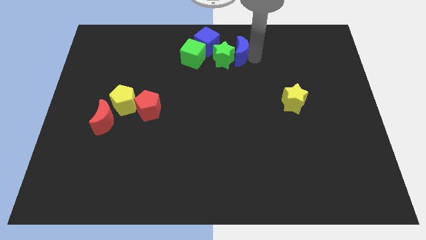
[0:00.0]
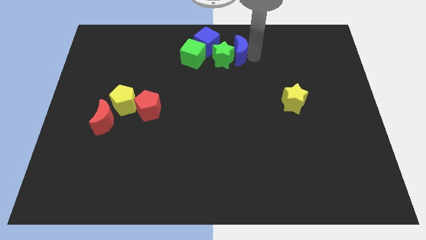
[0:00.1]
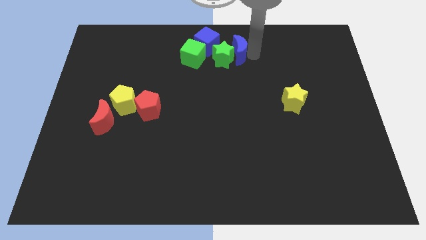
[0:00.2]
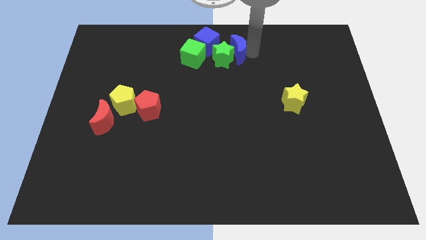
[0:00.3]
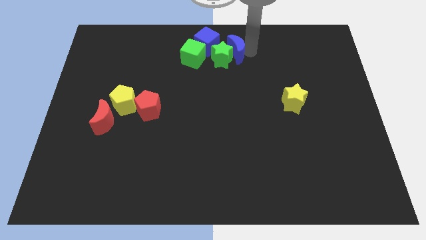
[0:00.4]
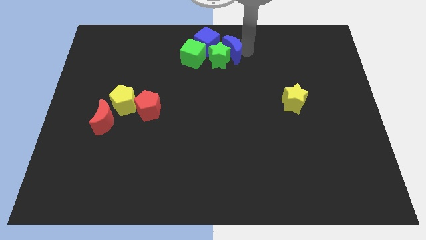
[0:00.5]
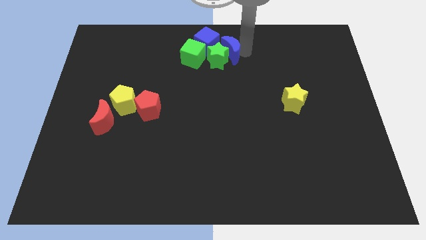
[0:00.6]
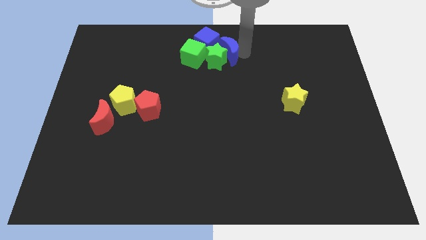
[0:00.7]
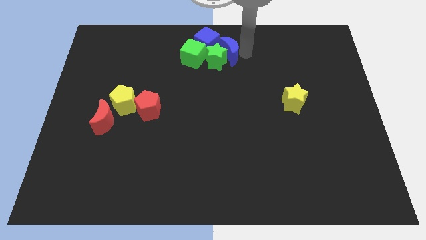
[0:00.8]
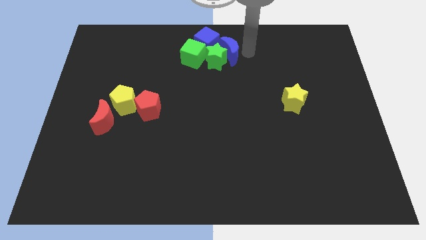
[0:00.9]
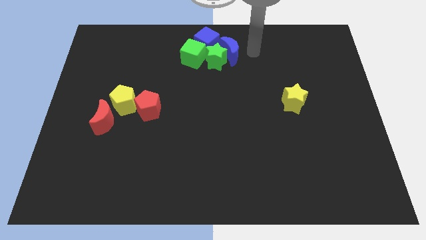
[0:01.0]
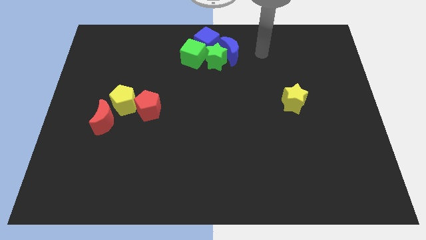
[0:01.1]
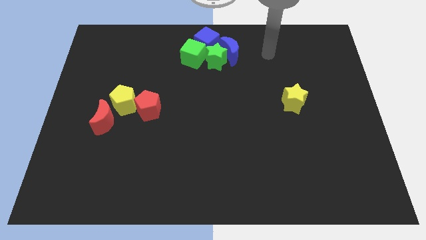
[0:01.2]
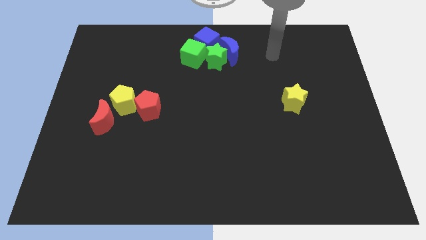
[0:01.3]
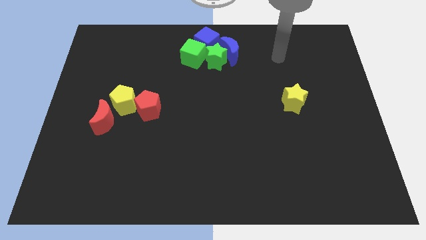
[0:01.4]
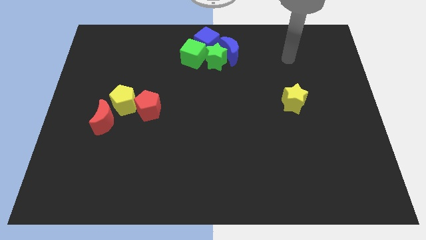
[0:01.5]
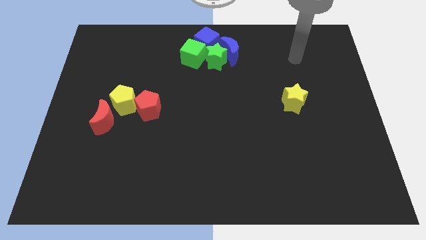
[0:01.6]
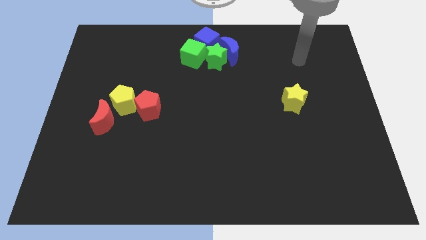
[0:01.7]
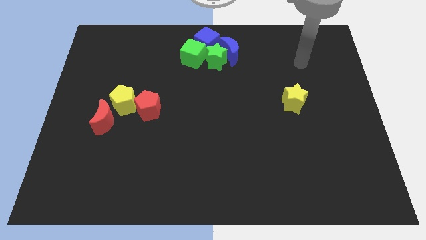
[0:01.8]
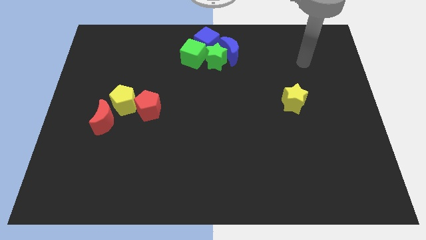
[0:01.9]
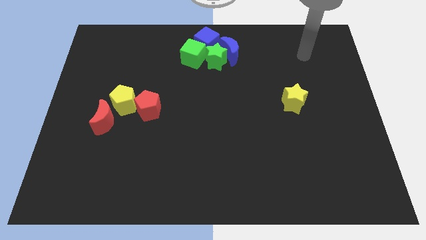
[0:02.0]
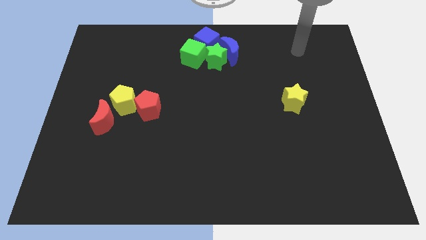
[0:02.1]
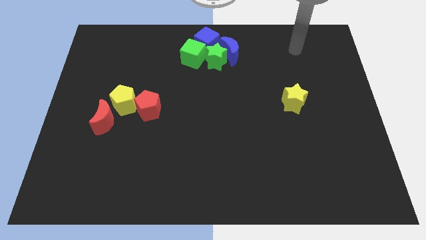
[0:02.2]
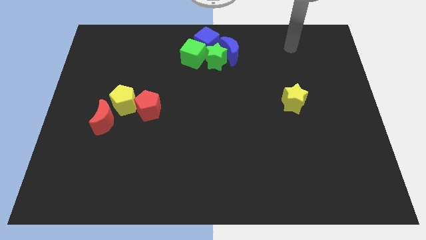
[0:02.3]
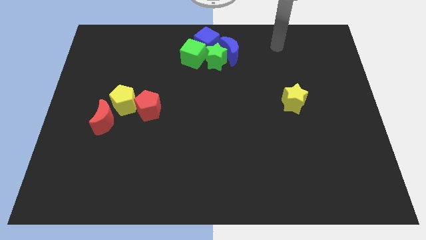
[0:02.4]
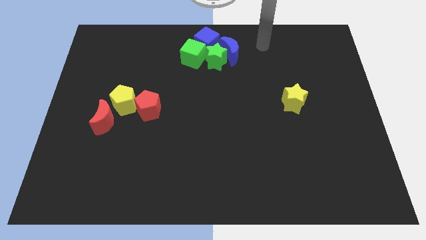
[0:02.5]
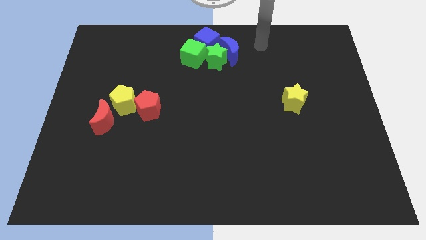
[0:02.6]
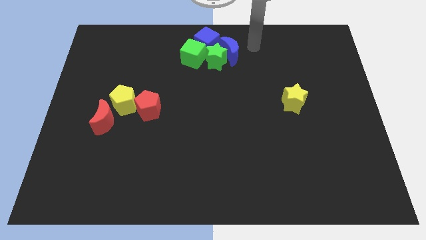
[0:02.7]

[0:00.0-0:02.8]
push the blue crescent close to the blue cube

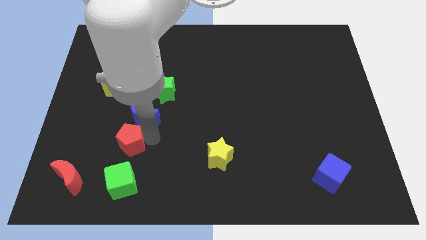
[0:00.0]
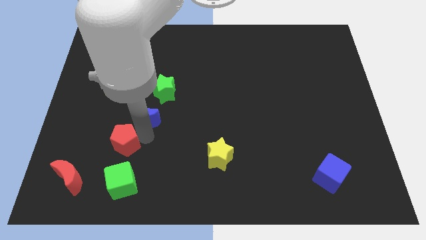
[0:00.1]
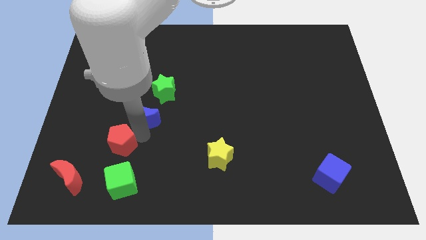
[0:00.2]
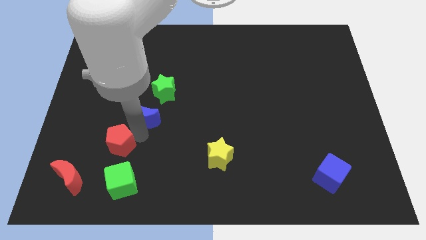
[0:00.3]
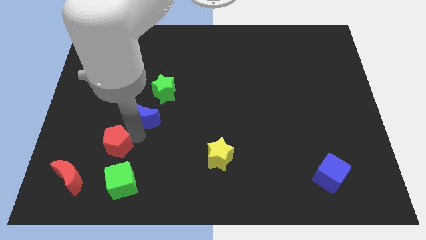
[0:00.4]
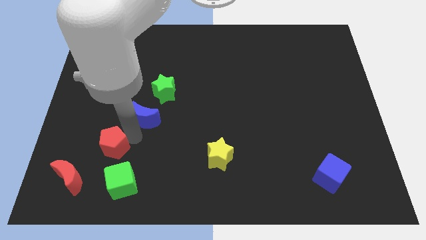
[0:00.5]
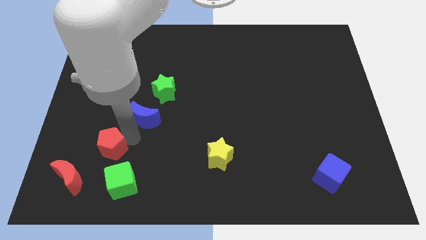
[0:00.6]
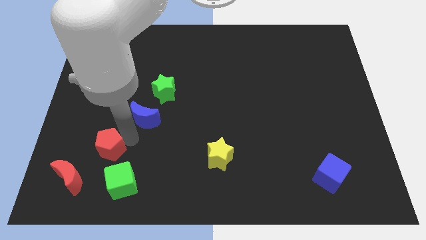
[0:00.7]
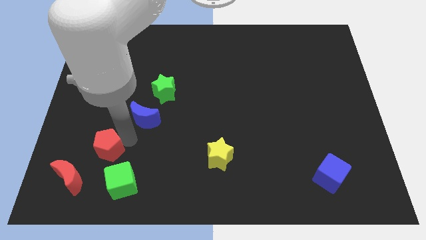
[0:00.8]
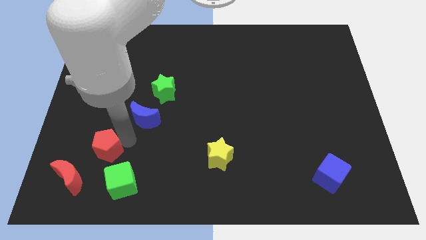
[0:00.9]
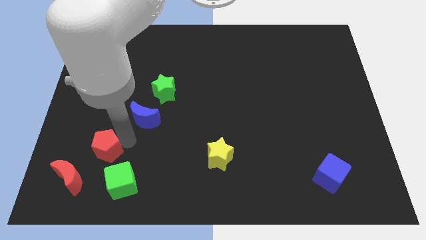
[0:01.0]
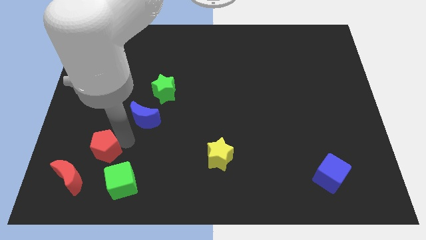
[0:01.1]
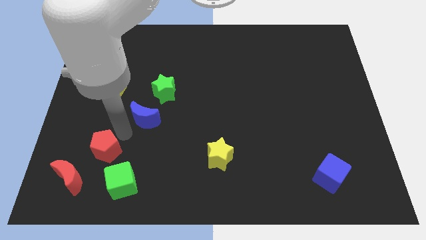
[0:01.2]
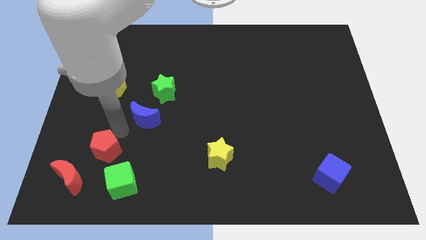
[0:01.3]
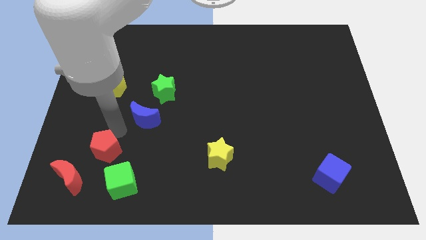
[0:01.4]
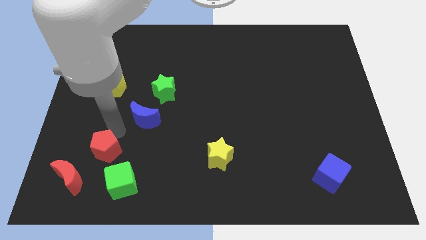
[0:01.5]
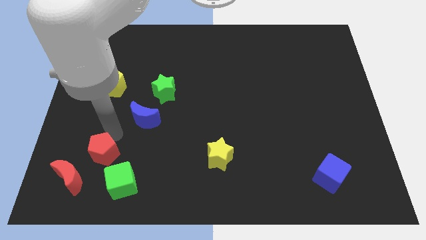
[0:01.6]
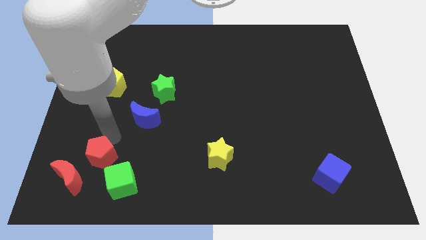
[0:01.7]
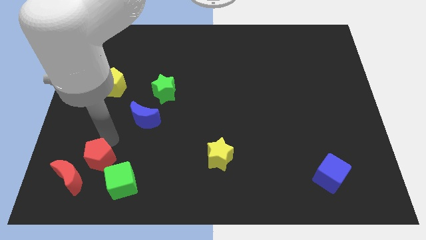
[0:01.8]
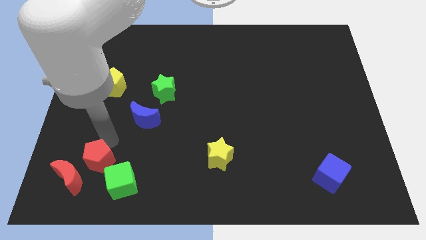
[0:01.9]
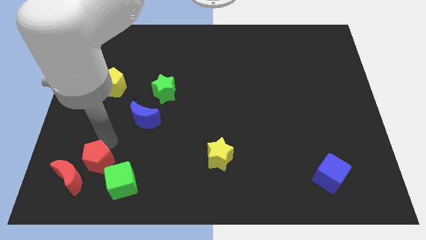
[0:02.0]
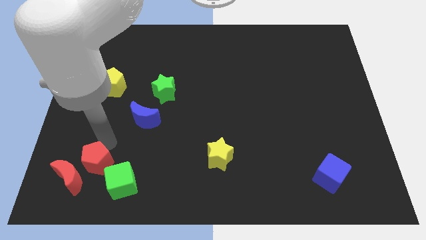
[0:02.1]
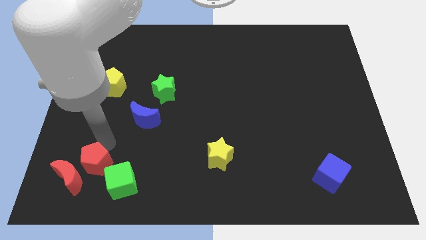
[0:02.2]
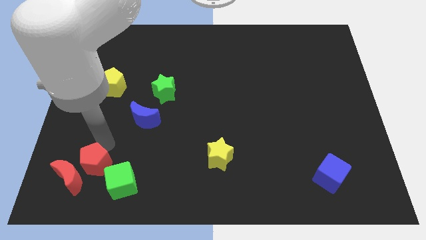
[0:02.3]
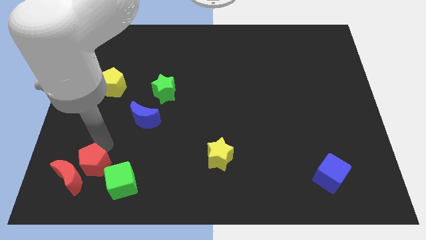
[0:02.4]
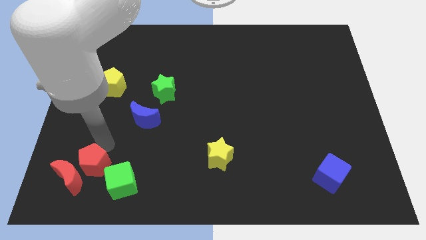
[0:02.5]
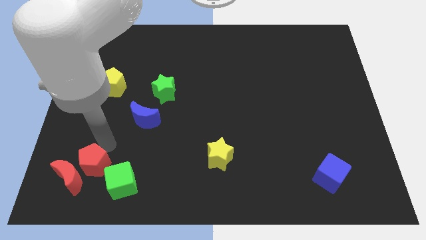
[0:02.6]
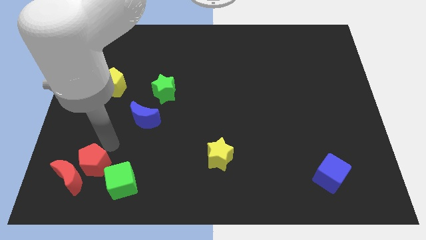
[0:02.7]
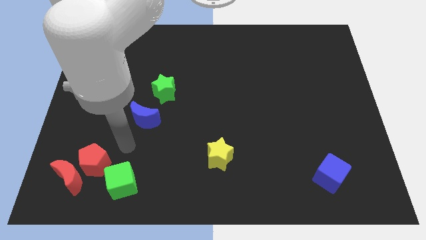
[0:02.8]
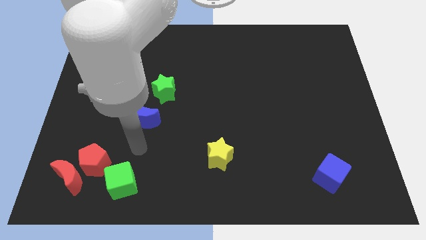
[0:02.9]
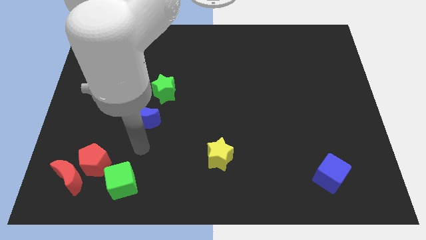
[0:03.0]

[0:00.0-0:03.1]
move the red pentagon to the top side of the red moon

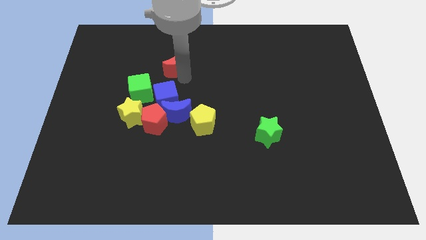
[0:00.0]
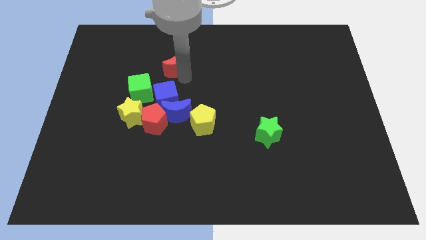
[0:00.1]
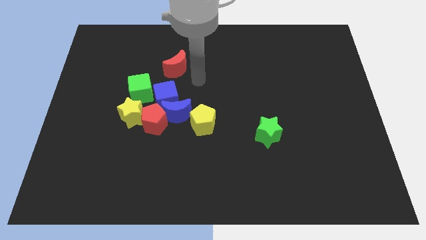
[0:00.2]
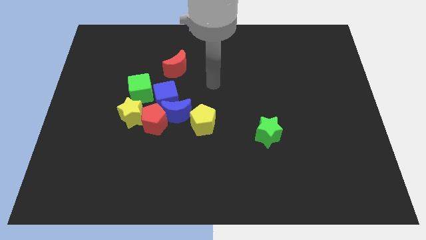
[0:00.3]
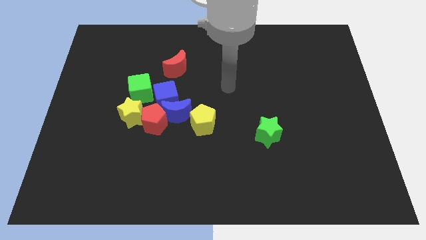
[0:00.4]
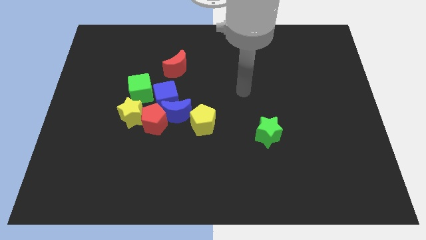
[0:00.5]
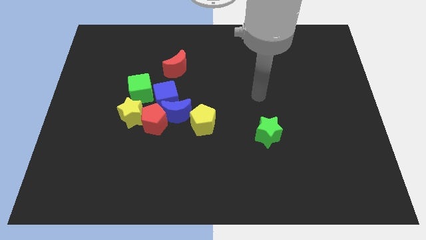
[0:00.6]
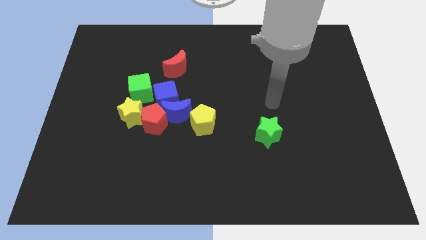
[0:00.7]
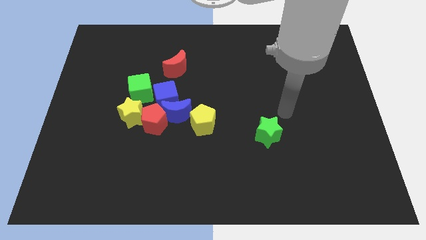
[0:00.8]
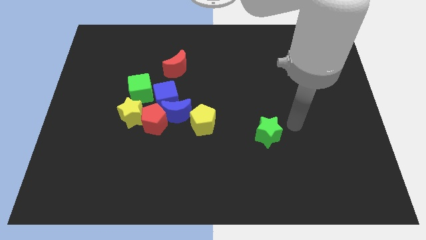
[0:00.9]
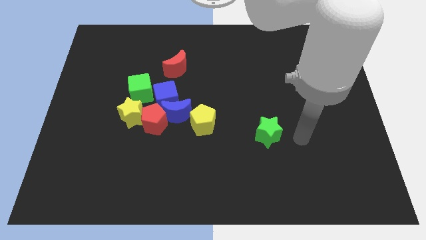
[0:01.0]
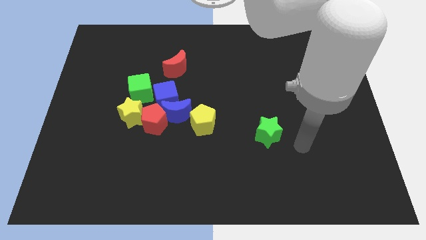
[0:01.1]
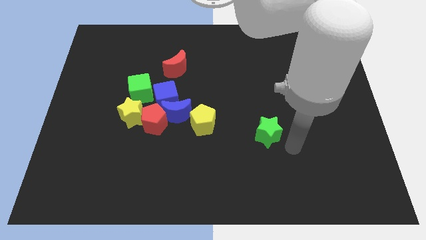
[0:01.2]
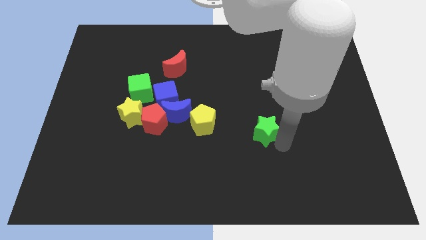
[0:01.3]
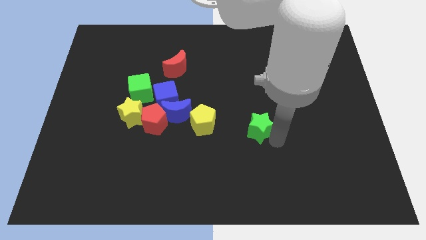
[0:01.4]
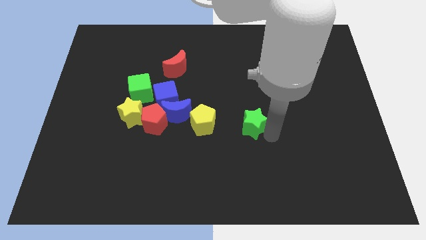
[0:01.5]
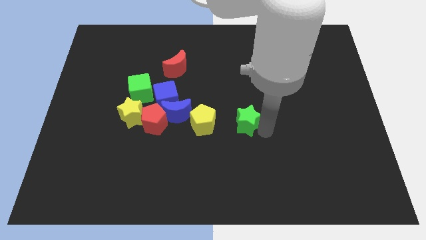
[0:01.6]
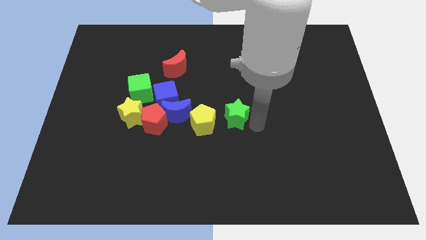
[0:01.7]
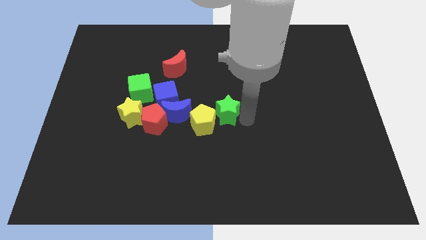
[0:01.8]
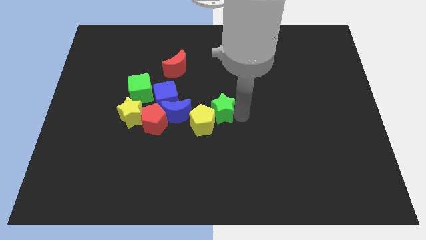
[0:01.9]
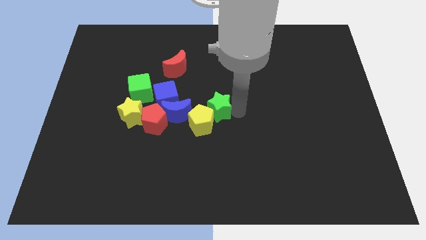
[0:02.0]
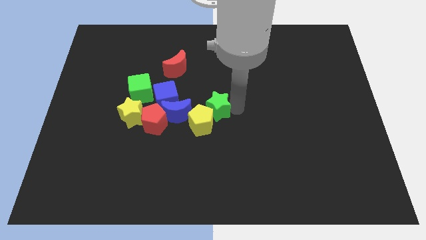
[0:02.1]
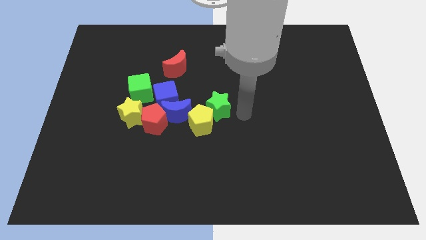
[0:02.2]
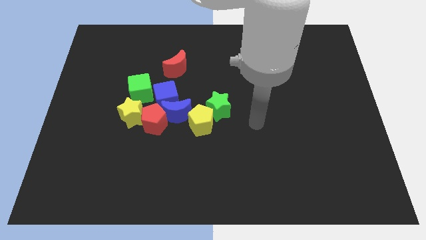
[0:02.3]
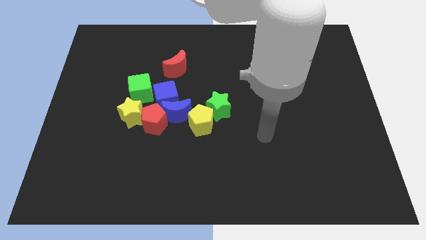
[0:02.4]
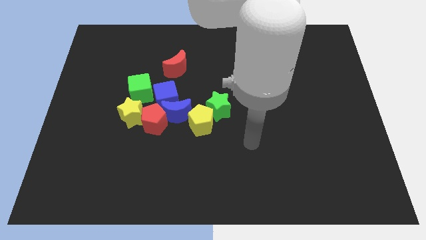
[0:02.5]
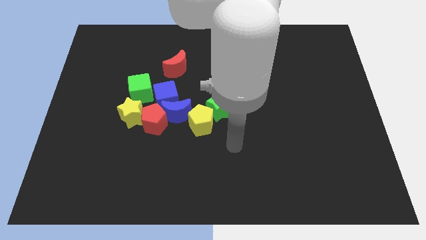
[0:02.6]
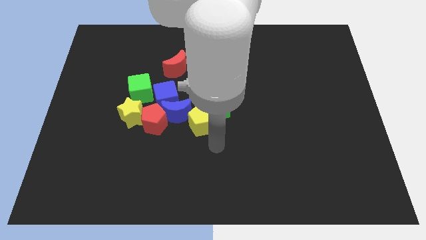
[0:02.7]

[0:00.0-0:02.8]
push the green star to the top right of the yellow pentagon
